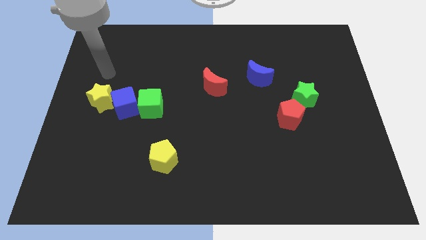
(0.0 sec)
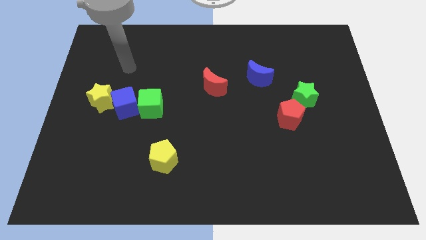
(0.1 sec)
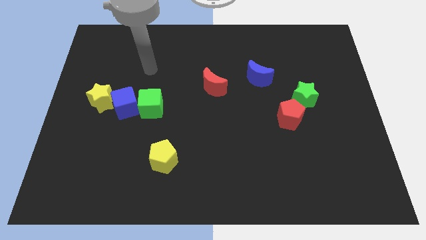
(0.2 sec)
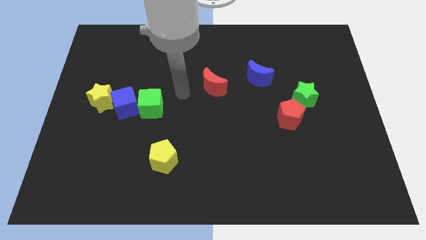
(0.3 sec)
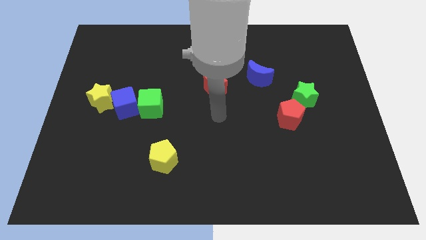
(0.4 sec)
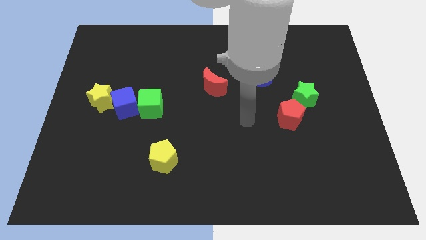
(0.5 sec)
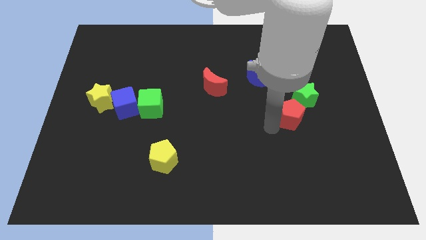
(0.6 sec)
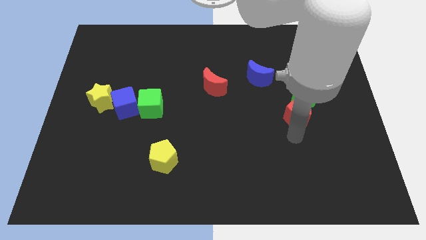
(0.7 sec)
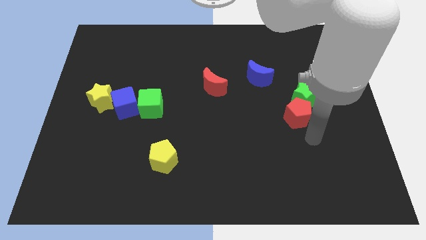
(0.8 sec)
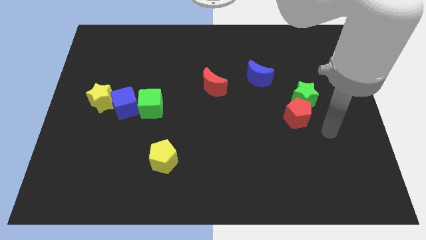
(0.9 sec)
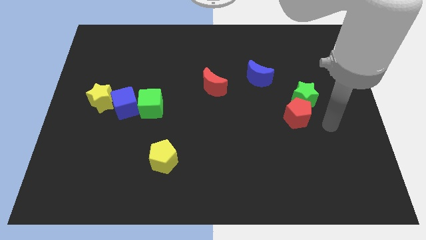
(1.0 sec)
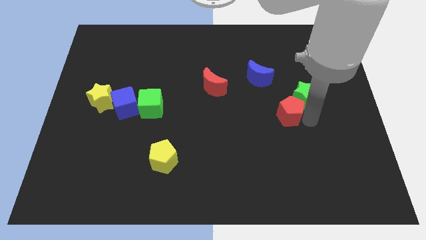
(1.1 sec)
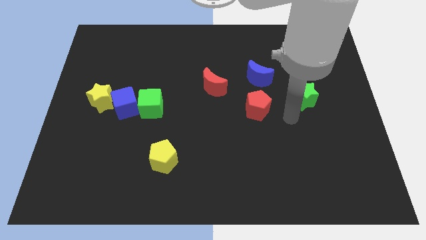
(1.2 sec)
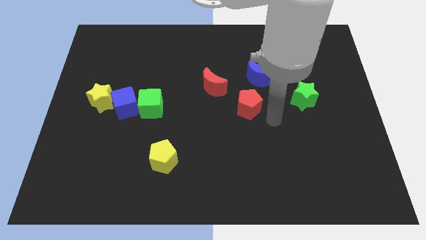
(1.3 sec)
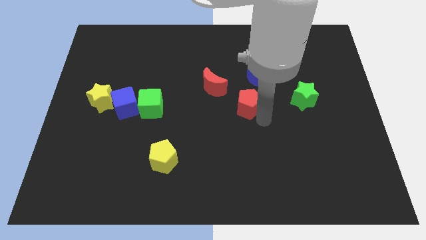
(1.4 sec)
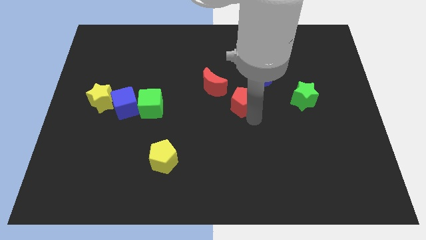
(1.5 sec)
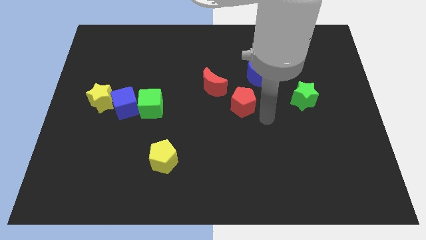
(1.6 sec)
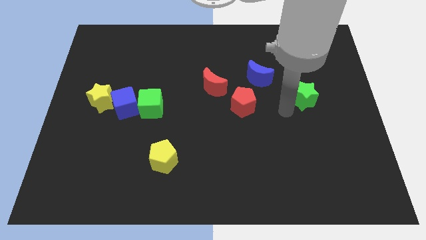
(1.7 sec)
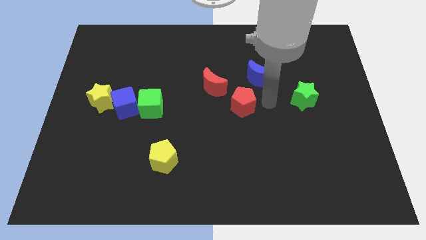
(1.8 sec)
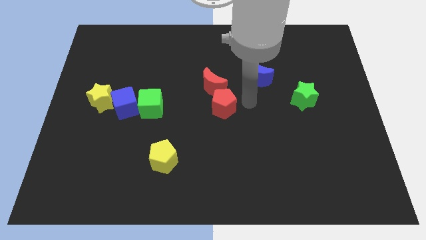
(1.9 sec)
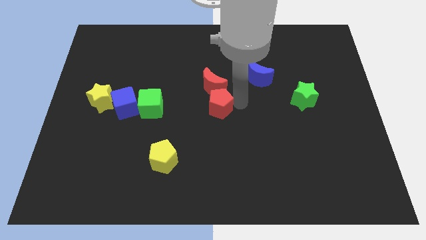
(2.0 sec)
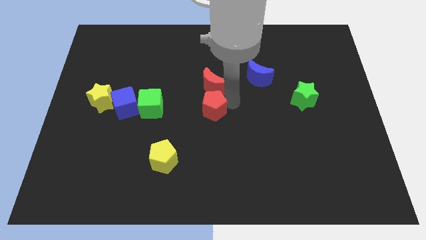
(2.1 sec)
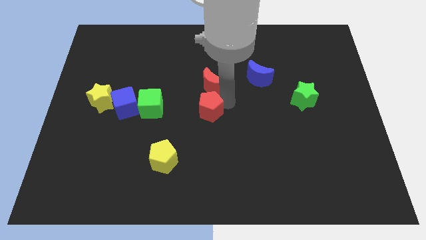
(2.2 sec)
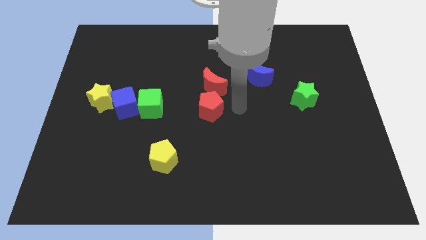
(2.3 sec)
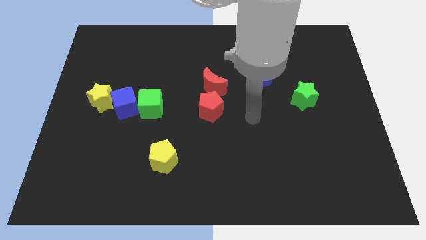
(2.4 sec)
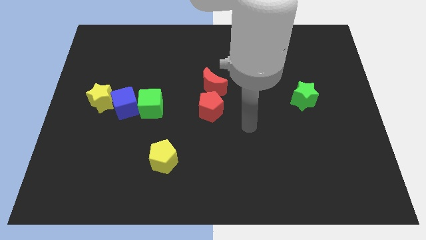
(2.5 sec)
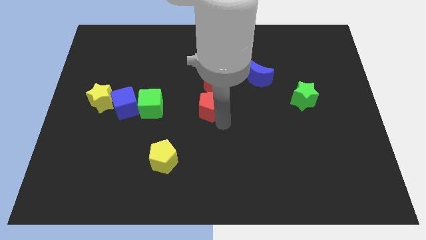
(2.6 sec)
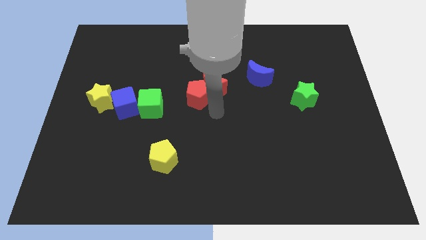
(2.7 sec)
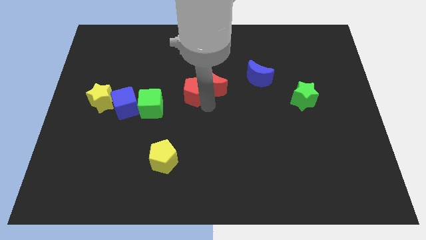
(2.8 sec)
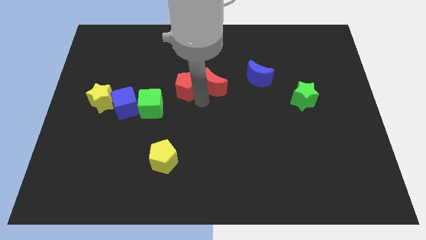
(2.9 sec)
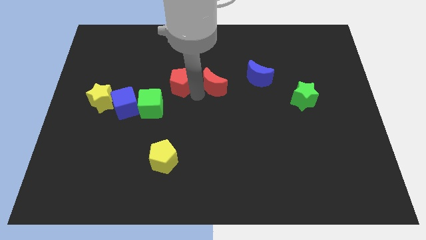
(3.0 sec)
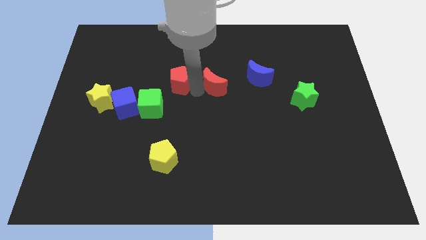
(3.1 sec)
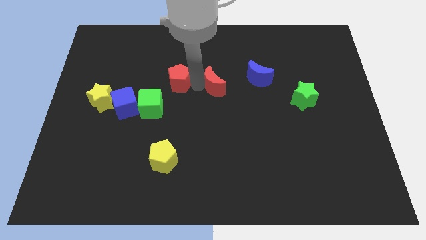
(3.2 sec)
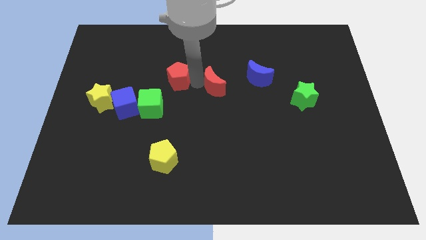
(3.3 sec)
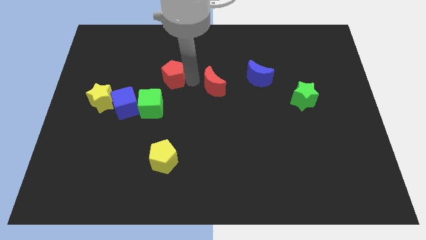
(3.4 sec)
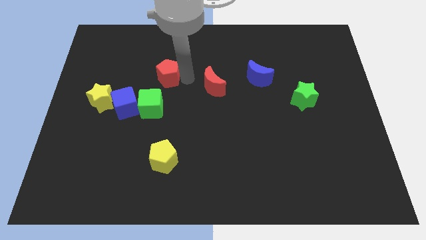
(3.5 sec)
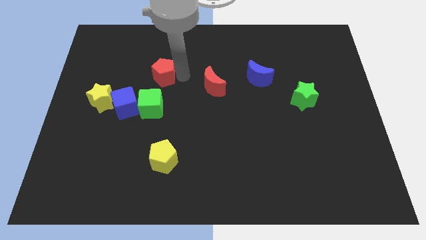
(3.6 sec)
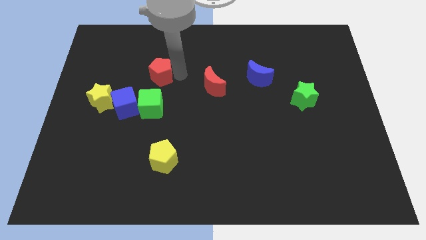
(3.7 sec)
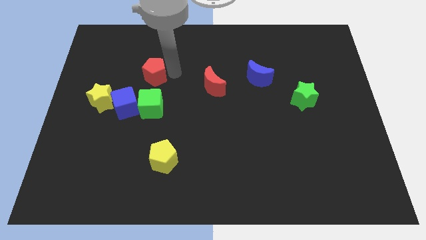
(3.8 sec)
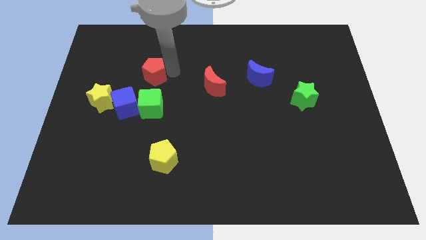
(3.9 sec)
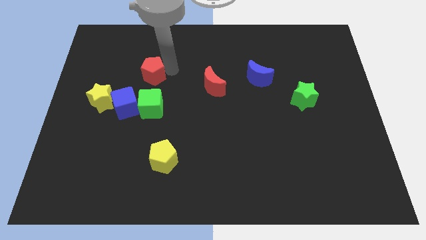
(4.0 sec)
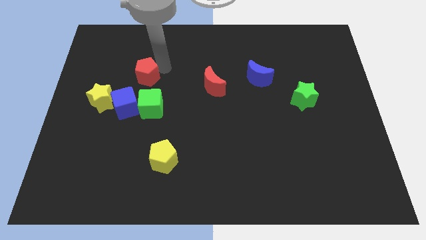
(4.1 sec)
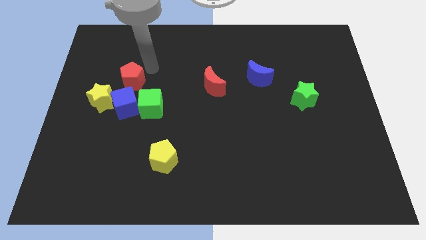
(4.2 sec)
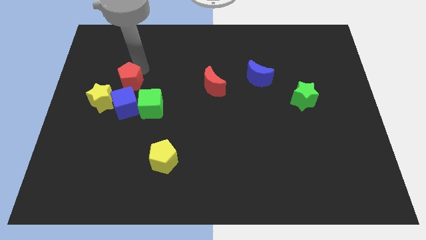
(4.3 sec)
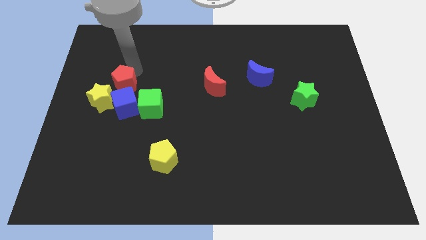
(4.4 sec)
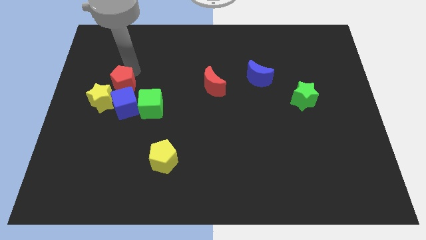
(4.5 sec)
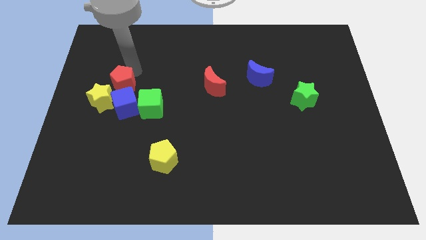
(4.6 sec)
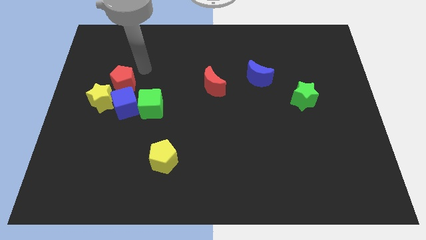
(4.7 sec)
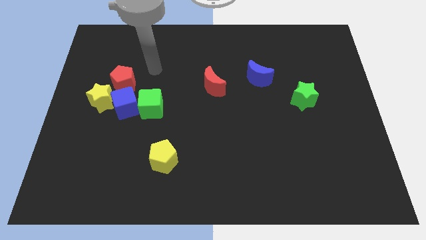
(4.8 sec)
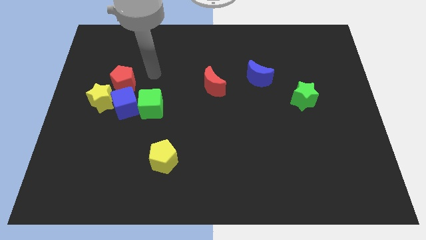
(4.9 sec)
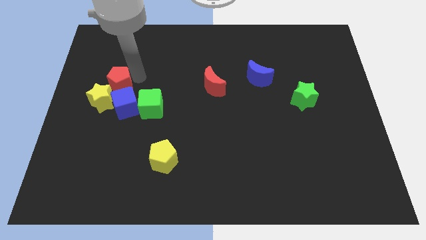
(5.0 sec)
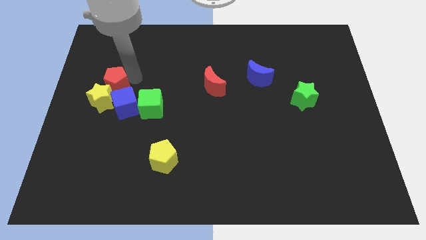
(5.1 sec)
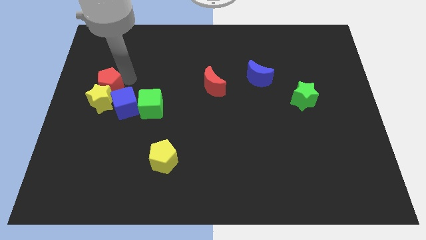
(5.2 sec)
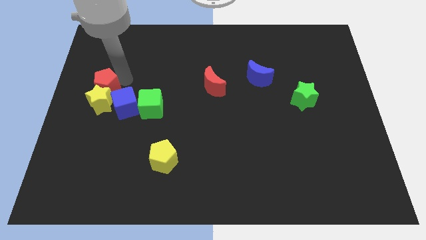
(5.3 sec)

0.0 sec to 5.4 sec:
put the red pentagon towards the yellow star

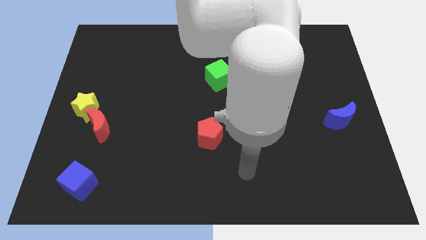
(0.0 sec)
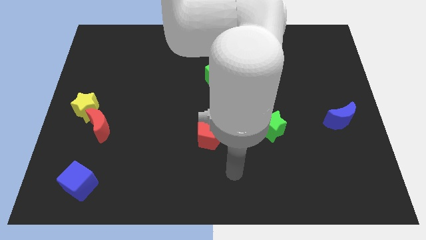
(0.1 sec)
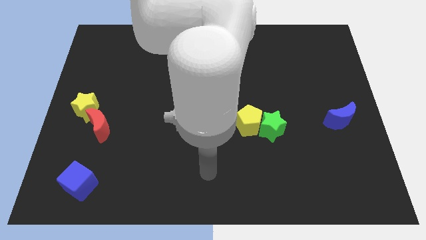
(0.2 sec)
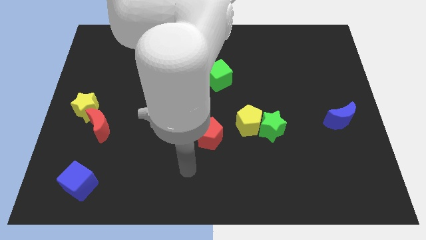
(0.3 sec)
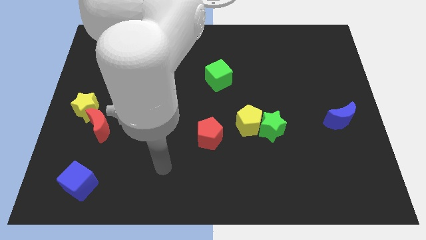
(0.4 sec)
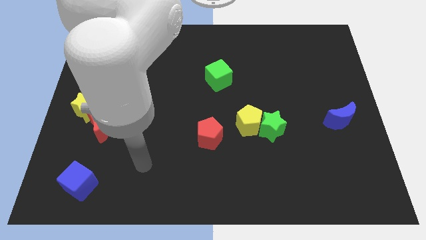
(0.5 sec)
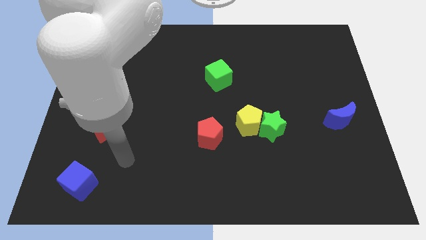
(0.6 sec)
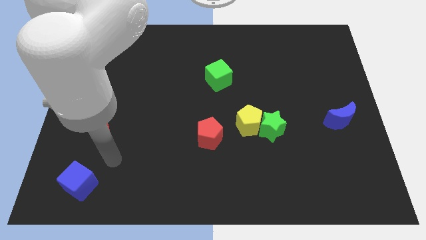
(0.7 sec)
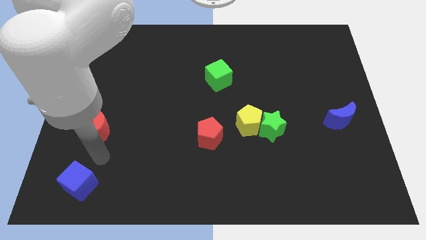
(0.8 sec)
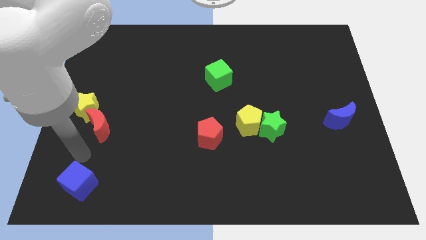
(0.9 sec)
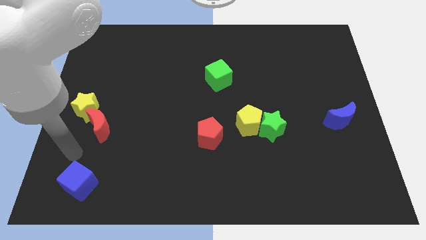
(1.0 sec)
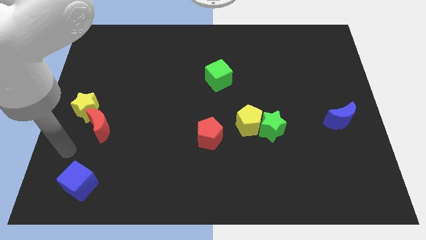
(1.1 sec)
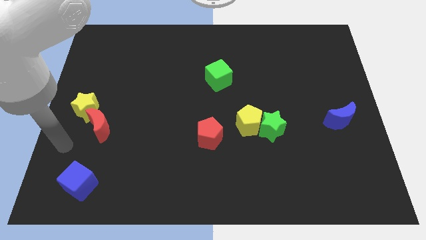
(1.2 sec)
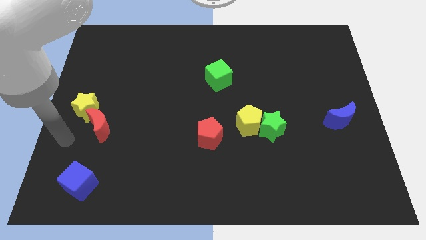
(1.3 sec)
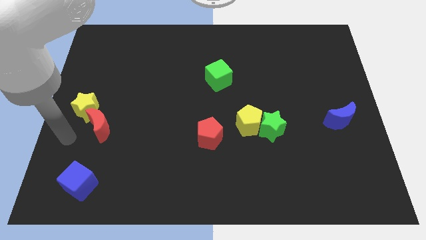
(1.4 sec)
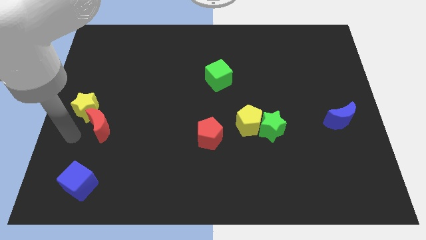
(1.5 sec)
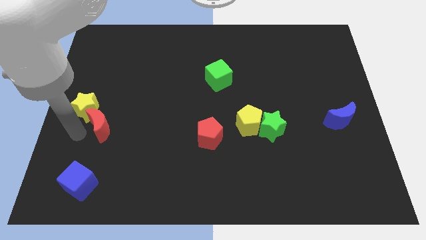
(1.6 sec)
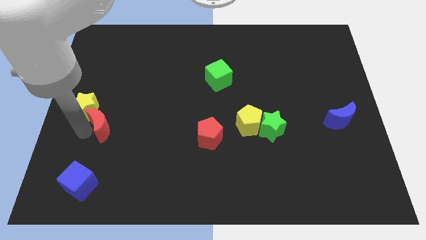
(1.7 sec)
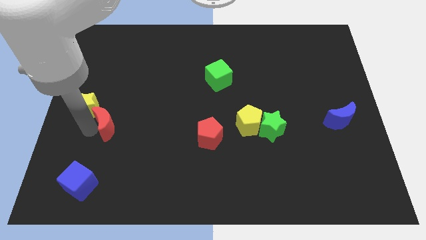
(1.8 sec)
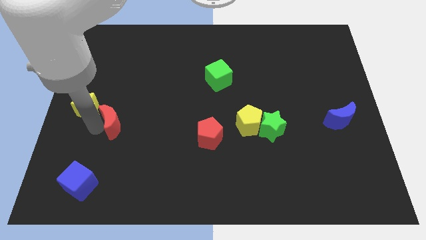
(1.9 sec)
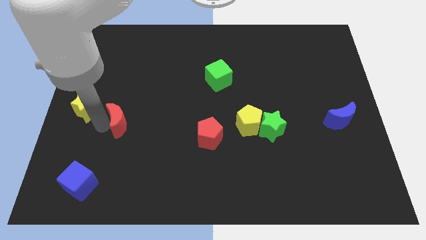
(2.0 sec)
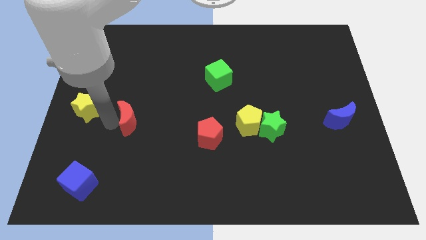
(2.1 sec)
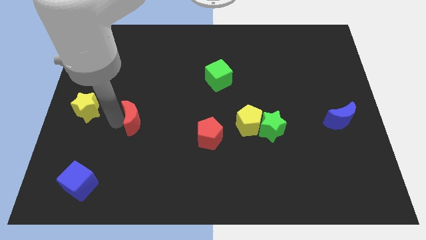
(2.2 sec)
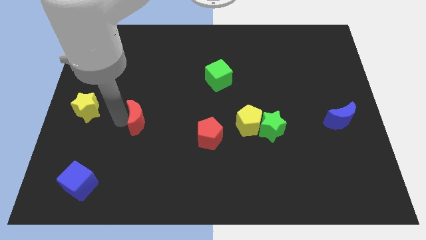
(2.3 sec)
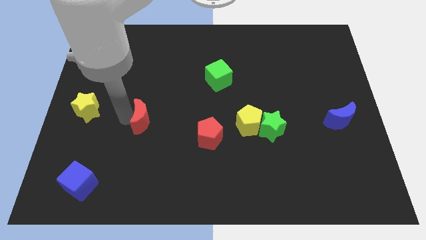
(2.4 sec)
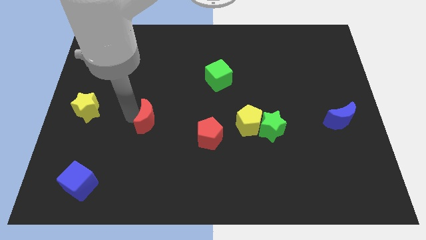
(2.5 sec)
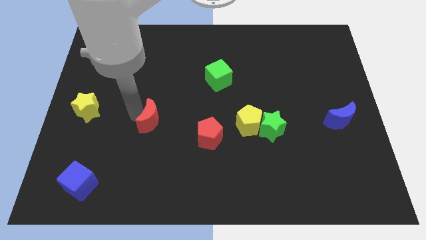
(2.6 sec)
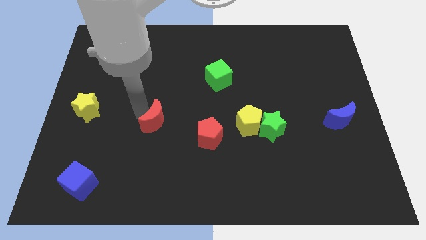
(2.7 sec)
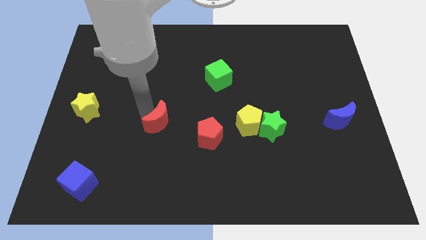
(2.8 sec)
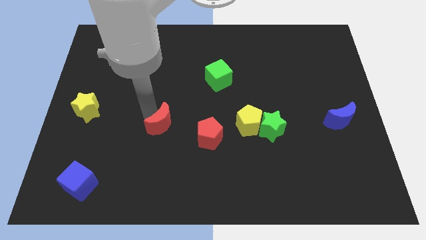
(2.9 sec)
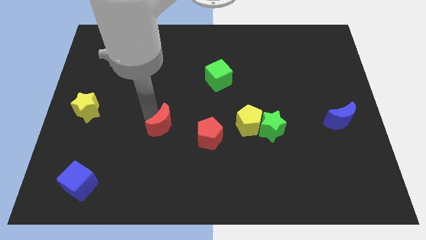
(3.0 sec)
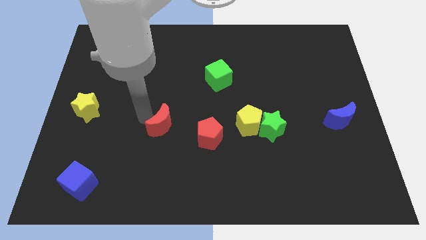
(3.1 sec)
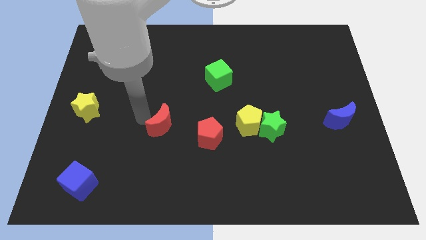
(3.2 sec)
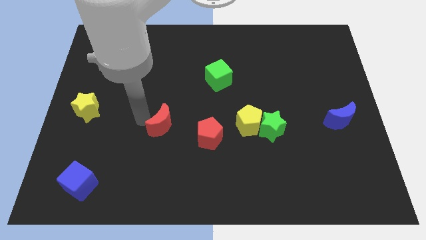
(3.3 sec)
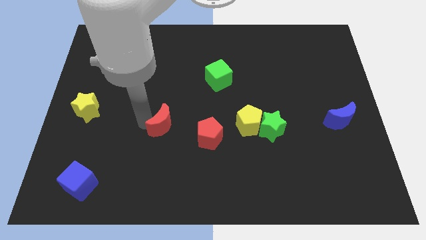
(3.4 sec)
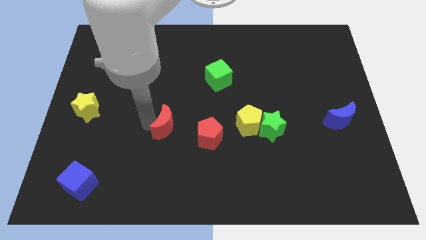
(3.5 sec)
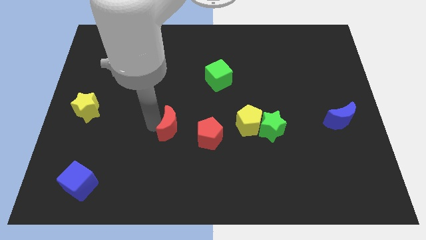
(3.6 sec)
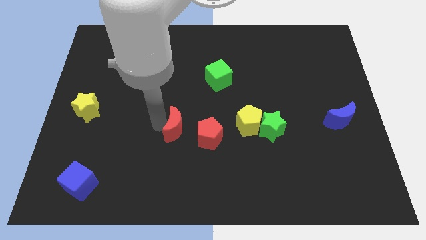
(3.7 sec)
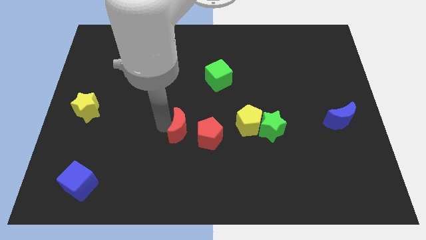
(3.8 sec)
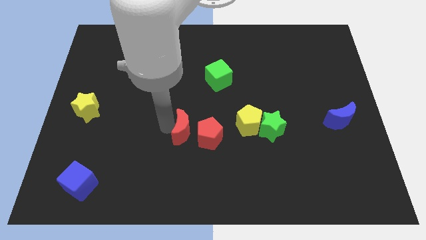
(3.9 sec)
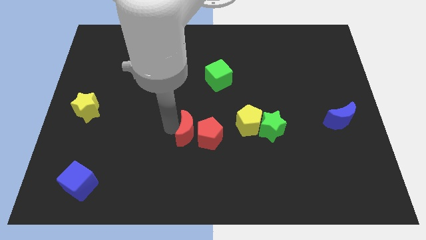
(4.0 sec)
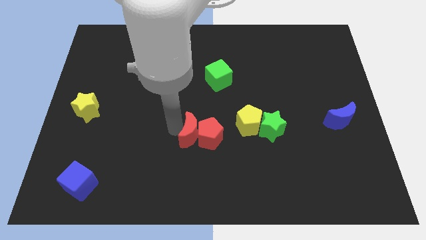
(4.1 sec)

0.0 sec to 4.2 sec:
slide the red moon towards the red pentagon
